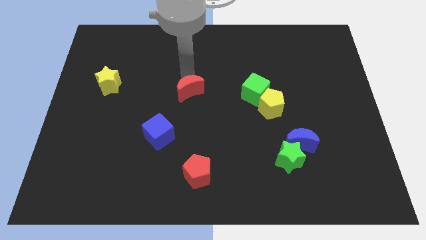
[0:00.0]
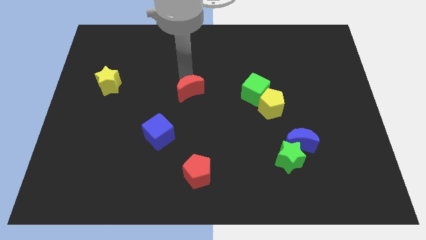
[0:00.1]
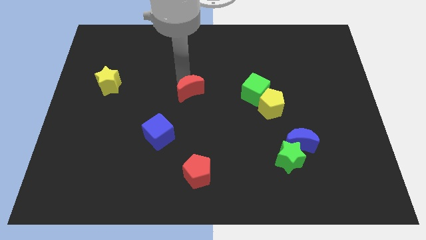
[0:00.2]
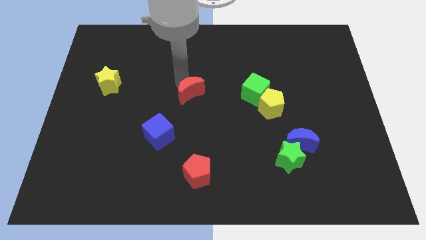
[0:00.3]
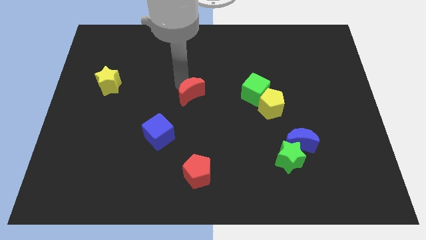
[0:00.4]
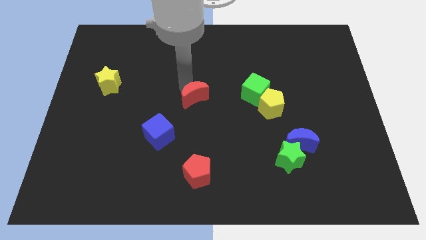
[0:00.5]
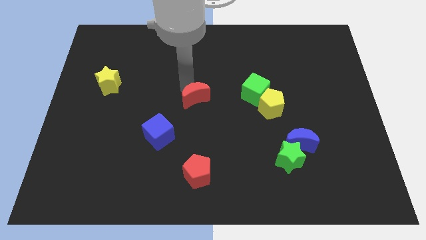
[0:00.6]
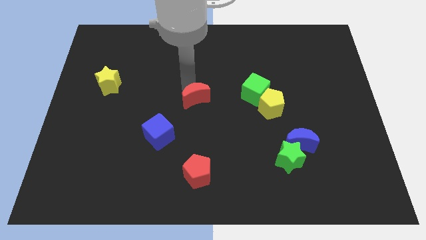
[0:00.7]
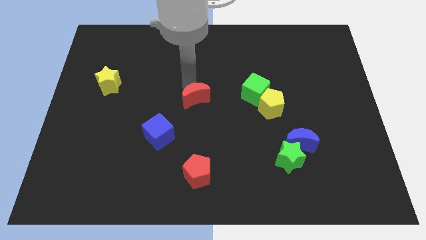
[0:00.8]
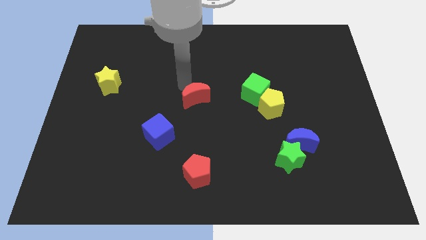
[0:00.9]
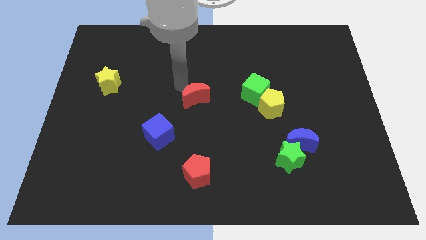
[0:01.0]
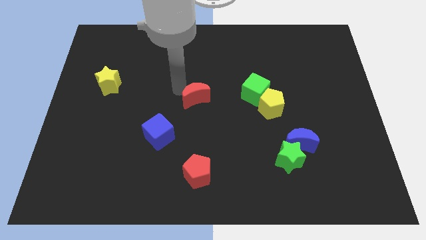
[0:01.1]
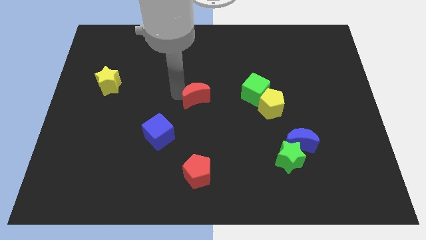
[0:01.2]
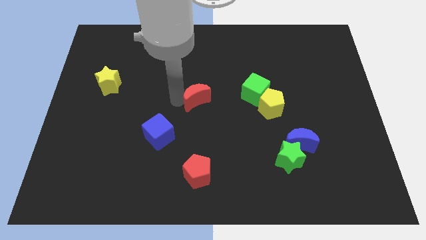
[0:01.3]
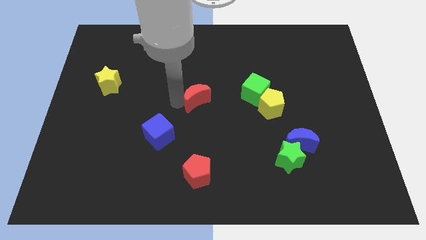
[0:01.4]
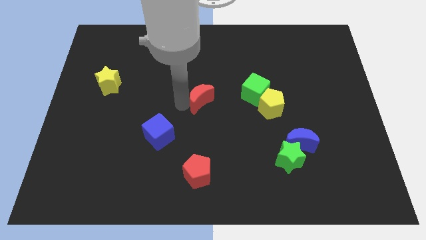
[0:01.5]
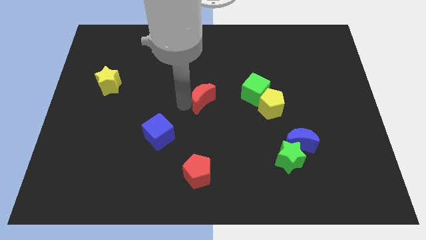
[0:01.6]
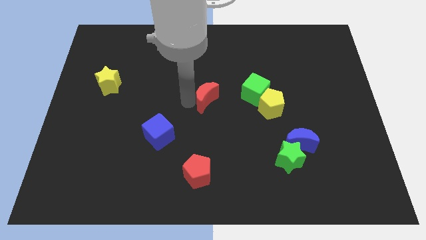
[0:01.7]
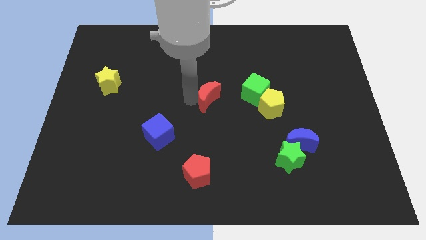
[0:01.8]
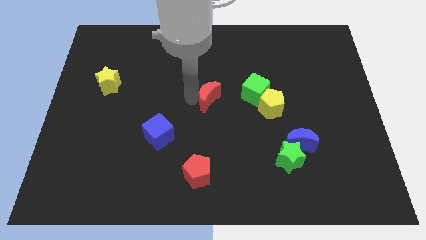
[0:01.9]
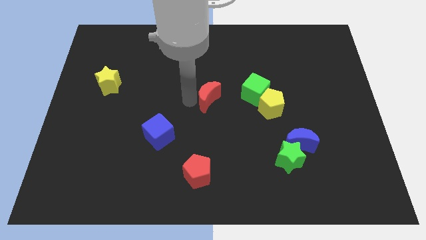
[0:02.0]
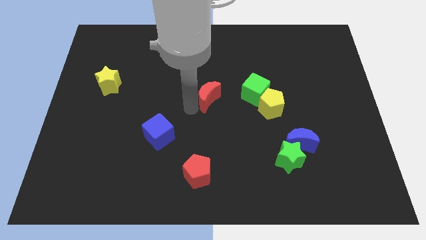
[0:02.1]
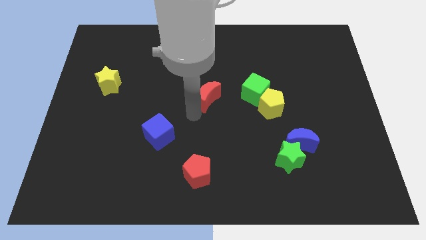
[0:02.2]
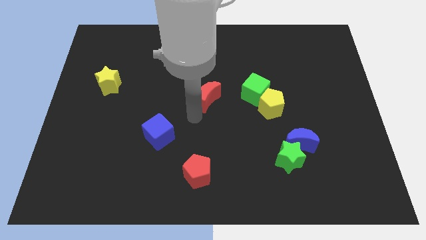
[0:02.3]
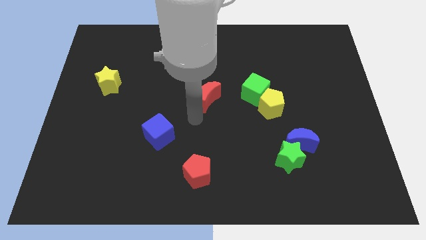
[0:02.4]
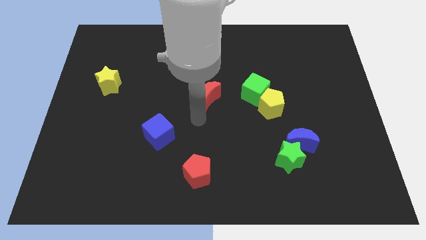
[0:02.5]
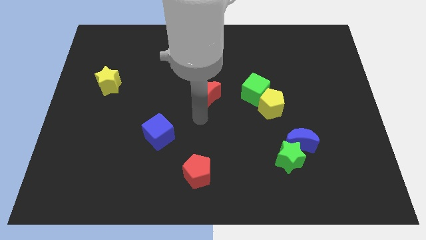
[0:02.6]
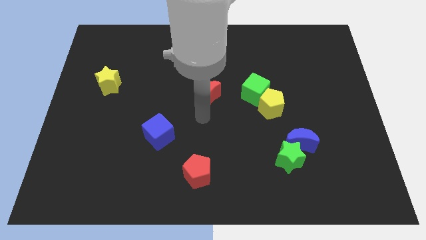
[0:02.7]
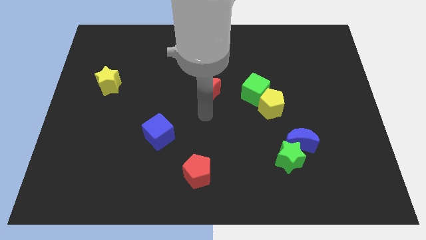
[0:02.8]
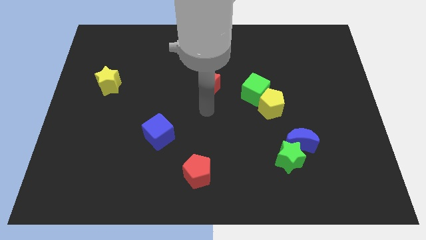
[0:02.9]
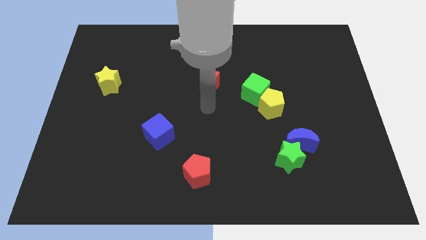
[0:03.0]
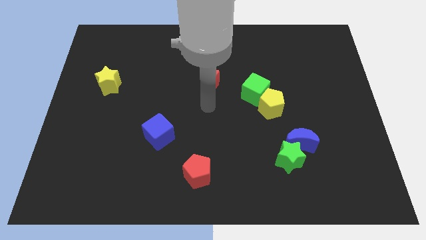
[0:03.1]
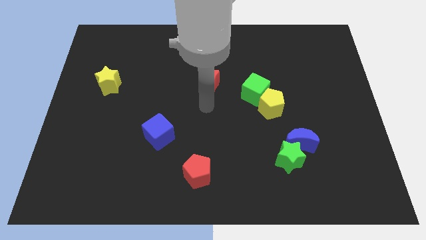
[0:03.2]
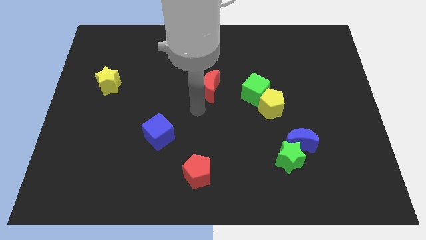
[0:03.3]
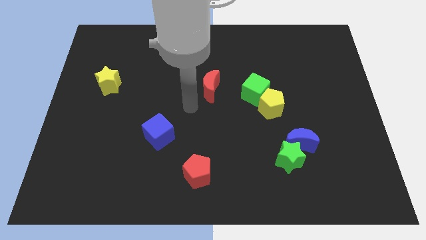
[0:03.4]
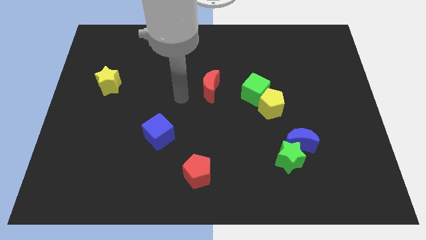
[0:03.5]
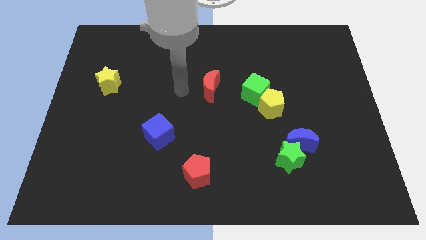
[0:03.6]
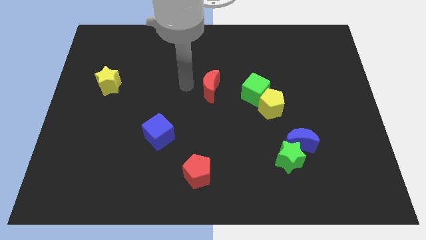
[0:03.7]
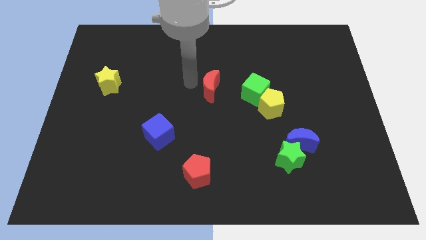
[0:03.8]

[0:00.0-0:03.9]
slightly turn the red moon towards right side of the board

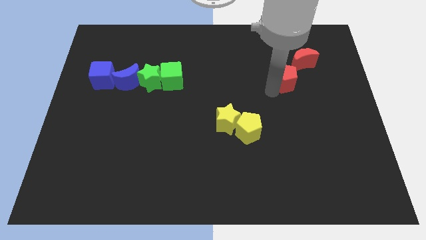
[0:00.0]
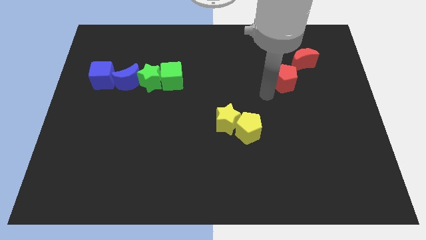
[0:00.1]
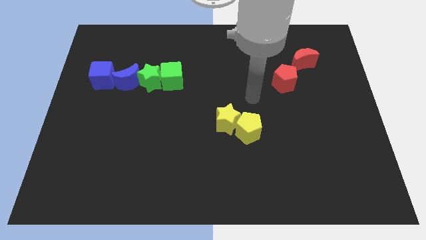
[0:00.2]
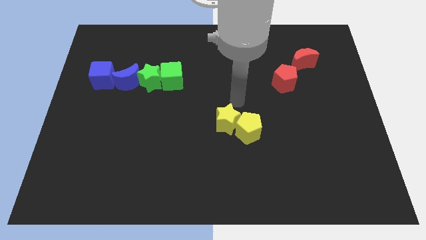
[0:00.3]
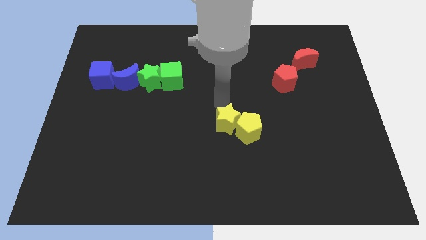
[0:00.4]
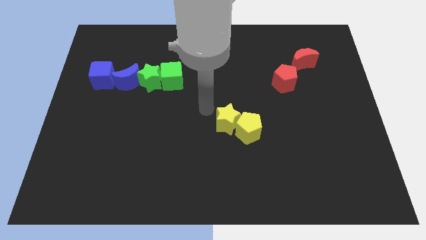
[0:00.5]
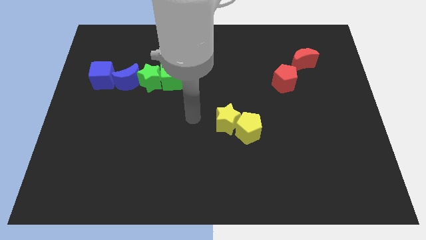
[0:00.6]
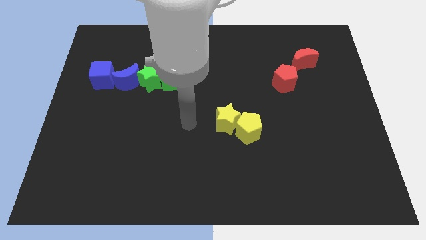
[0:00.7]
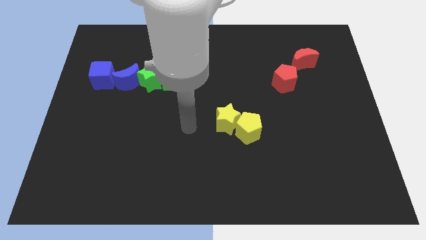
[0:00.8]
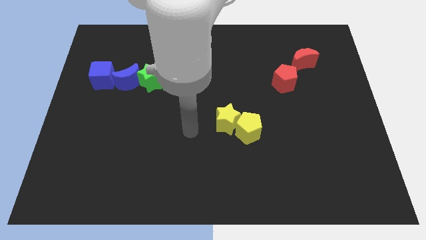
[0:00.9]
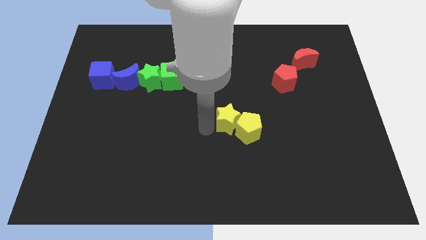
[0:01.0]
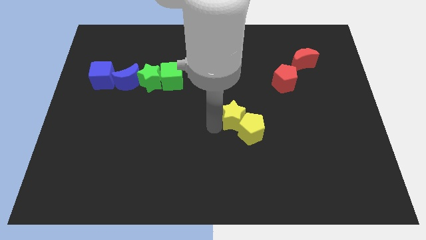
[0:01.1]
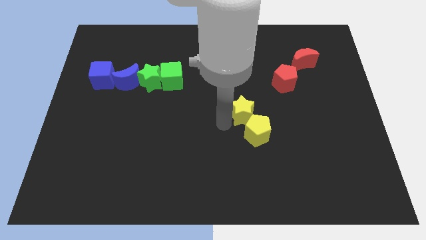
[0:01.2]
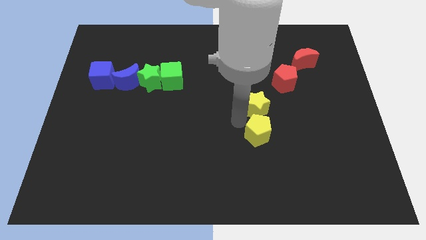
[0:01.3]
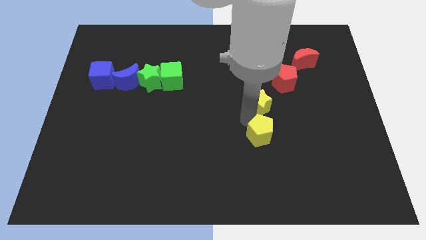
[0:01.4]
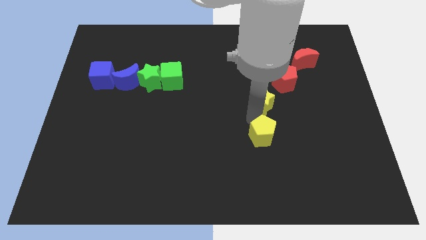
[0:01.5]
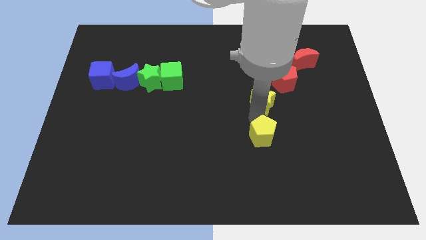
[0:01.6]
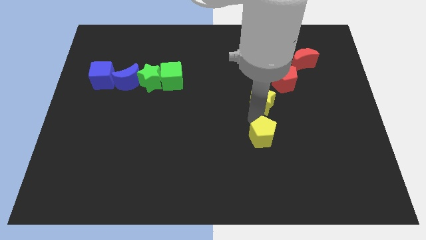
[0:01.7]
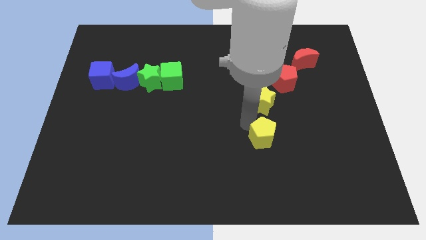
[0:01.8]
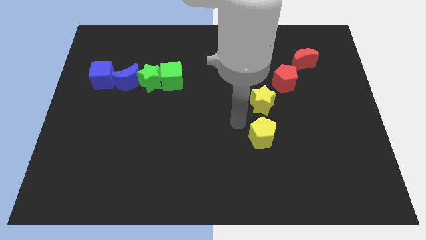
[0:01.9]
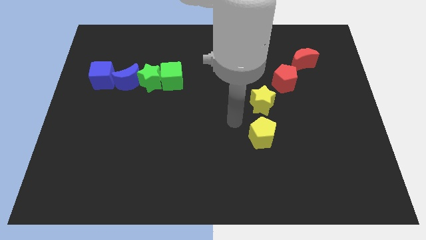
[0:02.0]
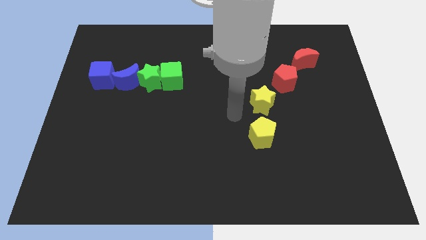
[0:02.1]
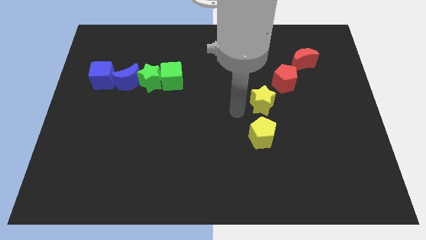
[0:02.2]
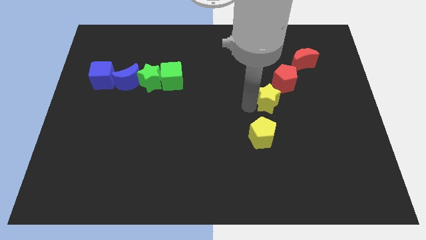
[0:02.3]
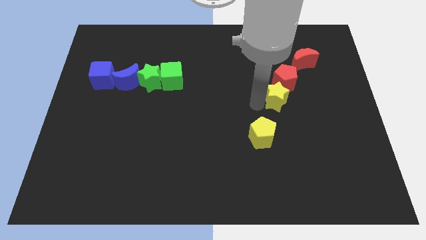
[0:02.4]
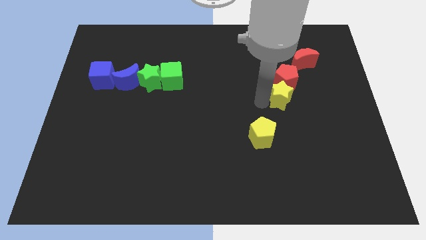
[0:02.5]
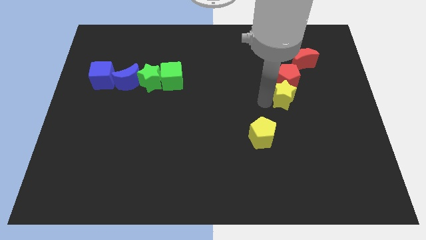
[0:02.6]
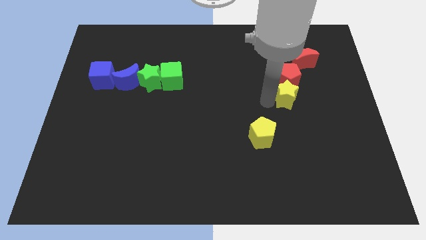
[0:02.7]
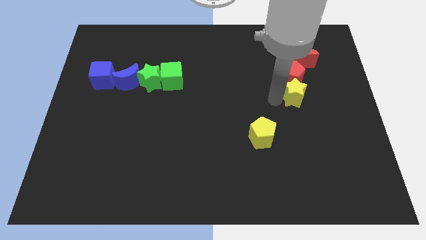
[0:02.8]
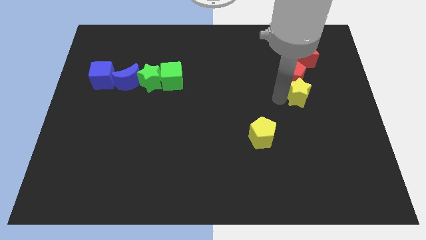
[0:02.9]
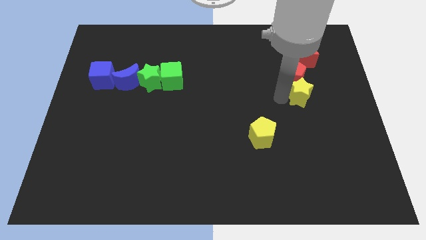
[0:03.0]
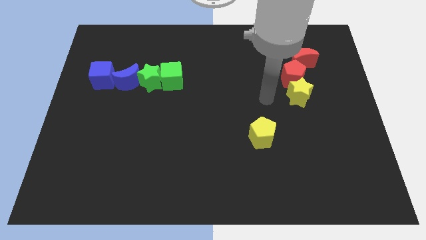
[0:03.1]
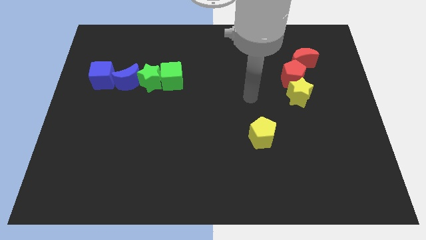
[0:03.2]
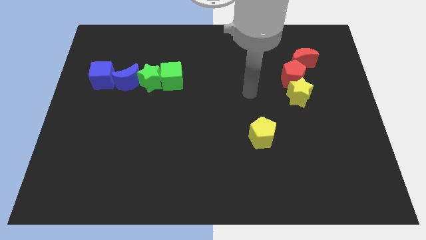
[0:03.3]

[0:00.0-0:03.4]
place yellow star to the bottom of red pentagon

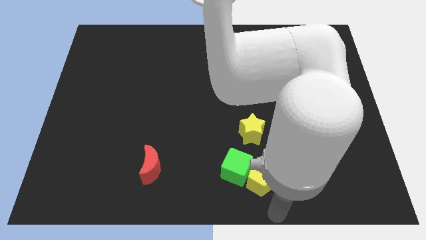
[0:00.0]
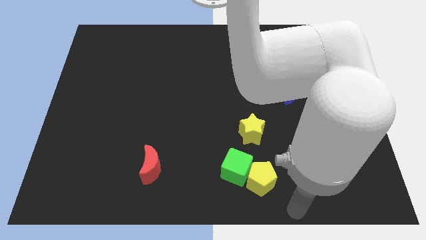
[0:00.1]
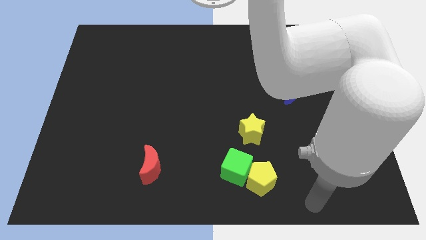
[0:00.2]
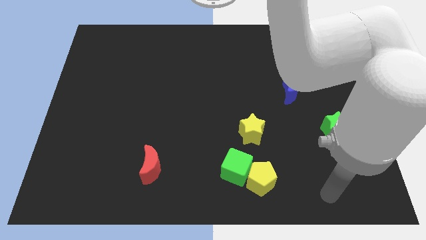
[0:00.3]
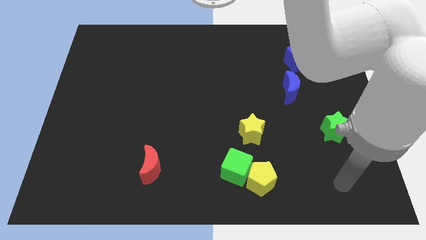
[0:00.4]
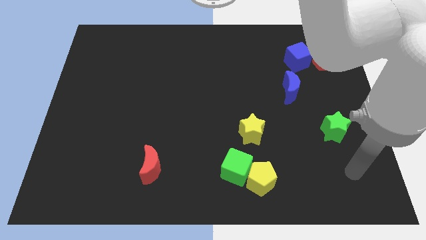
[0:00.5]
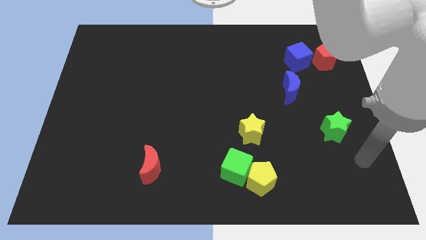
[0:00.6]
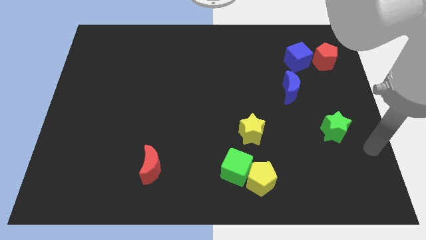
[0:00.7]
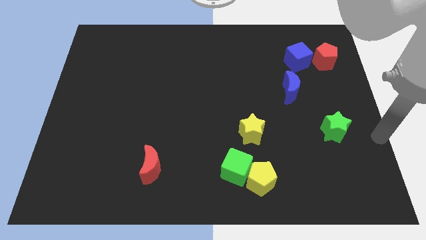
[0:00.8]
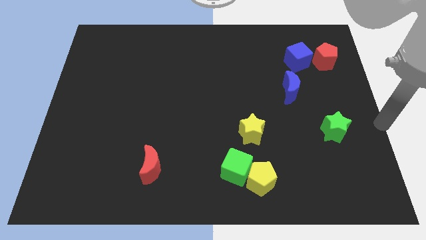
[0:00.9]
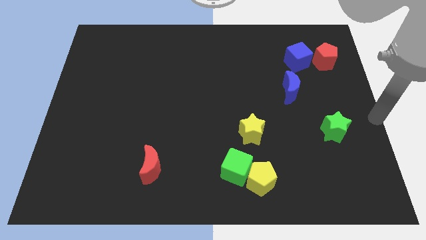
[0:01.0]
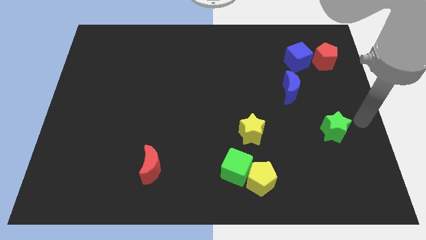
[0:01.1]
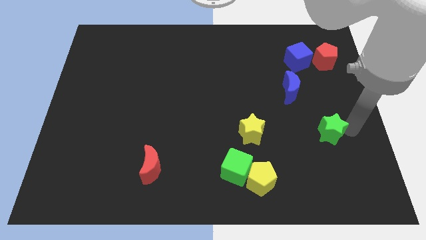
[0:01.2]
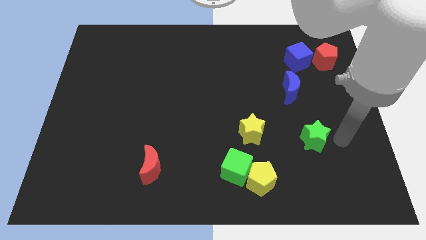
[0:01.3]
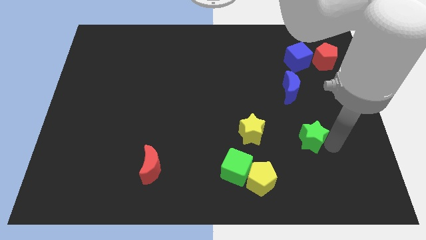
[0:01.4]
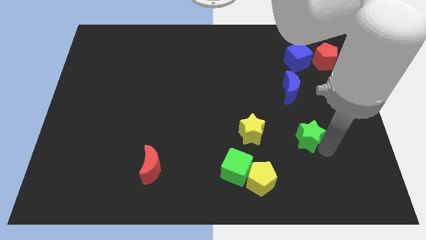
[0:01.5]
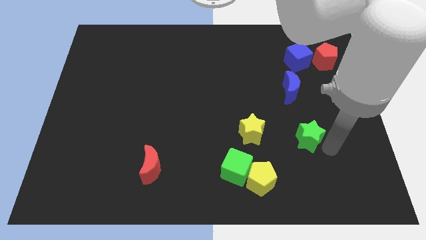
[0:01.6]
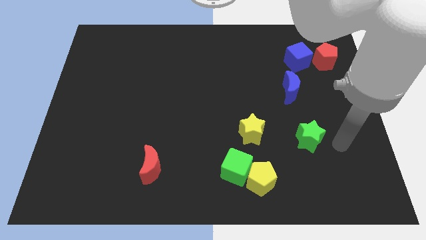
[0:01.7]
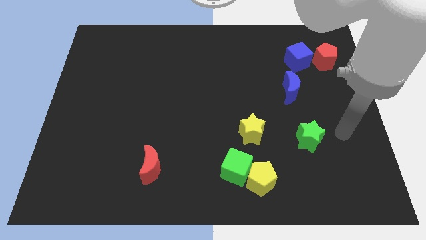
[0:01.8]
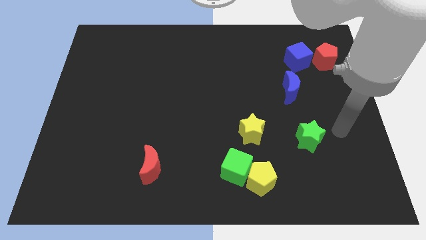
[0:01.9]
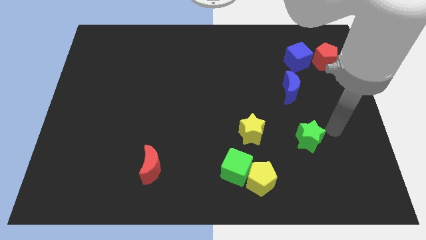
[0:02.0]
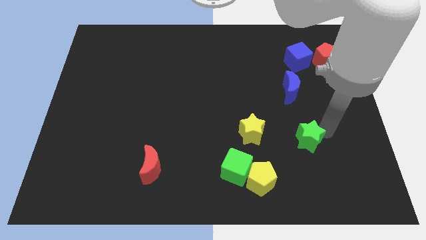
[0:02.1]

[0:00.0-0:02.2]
move green star right beside the yellow star
